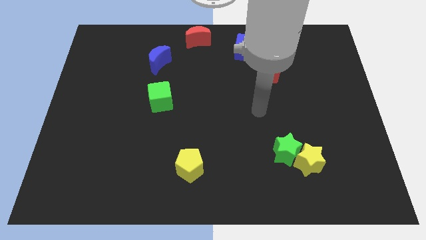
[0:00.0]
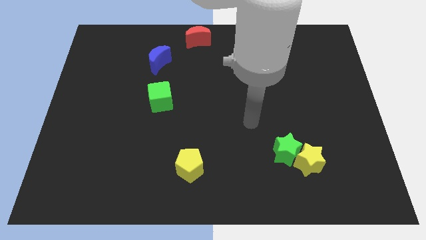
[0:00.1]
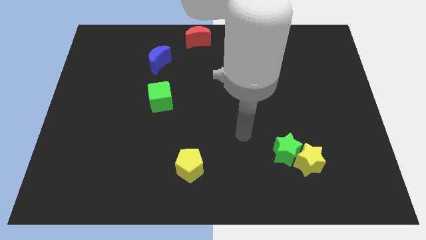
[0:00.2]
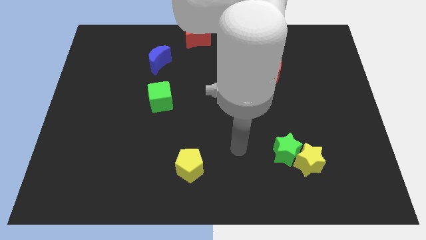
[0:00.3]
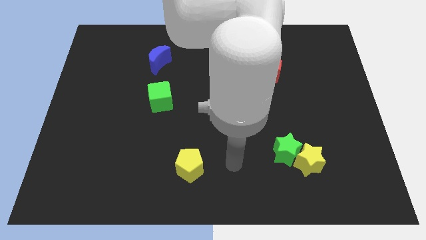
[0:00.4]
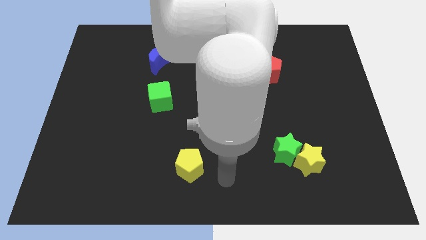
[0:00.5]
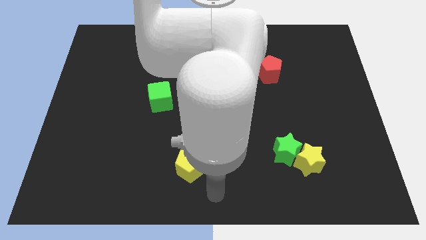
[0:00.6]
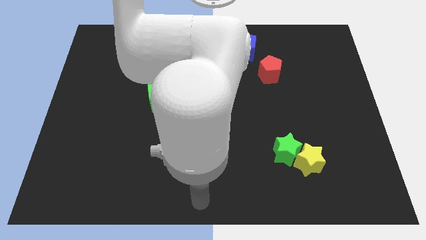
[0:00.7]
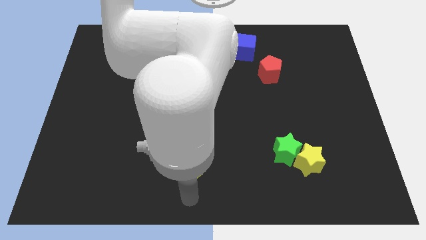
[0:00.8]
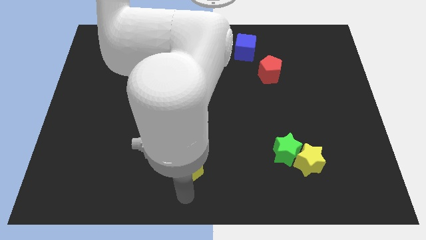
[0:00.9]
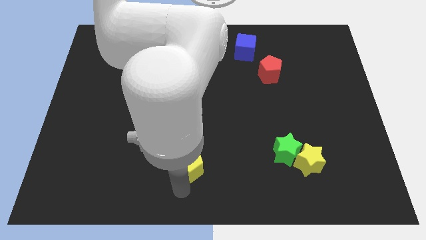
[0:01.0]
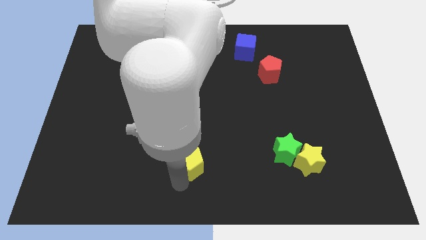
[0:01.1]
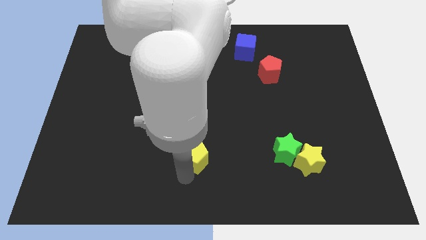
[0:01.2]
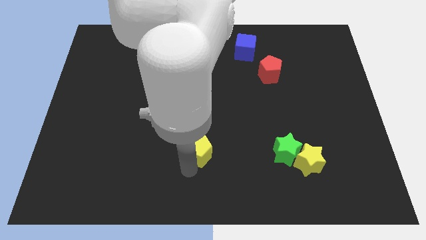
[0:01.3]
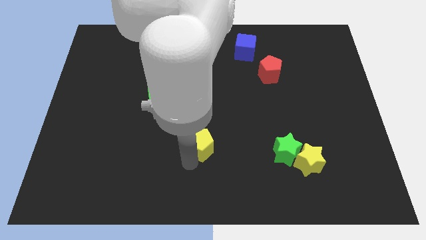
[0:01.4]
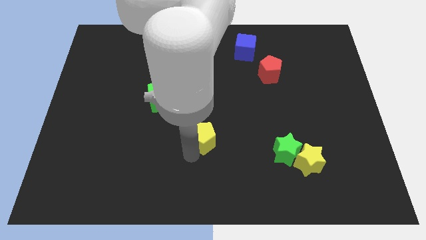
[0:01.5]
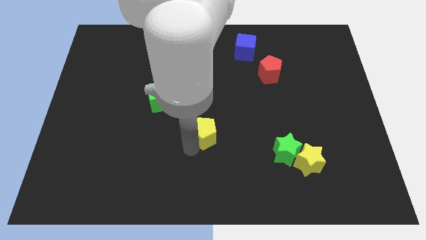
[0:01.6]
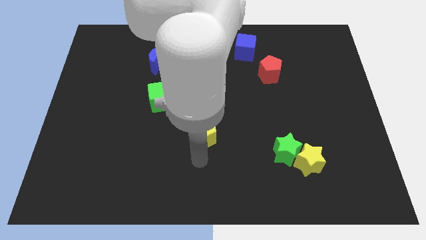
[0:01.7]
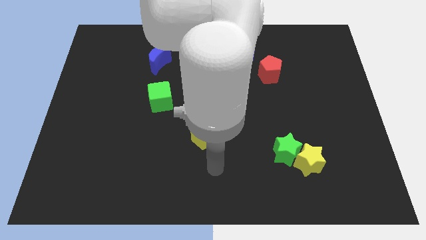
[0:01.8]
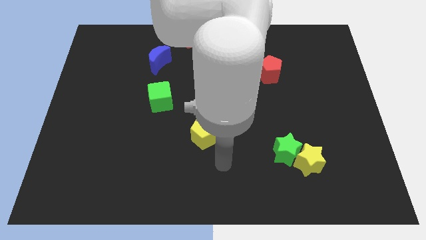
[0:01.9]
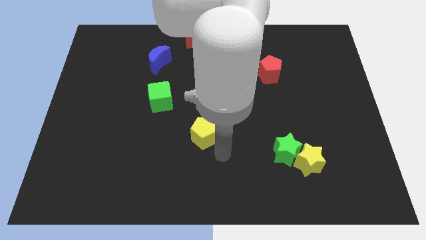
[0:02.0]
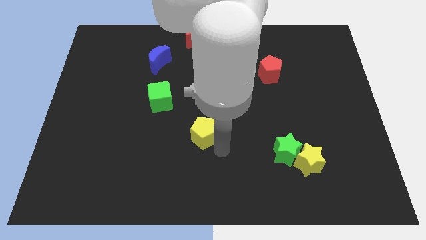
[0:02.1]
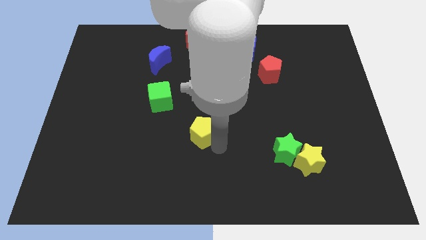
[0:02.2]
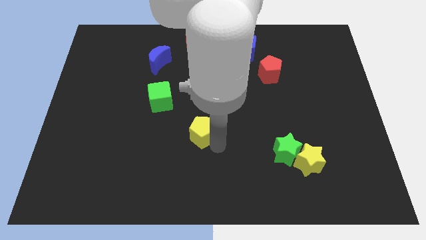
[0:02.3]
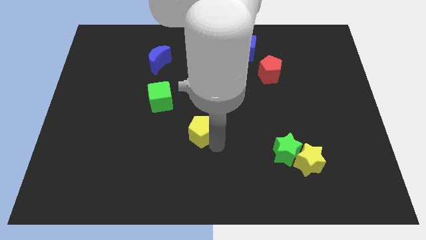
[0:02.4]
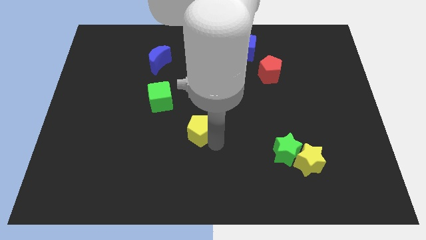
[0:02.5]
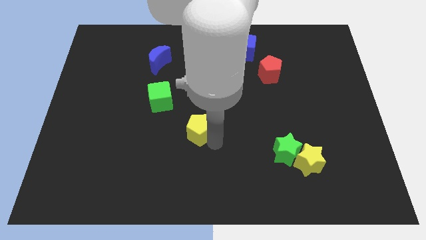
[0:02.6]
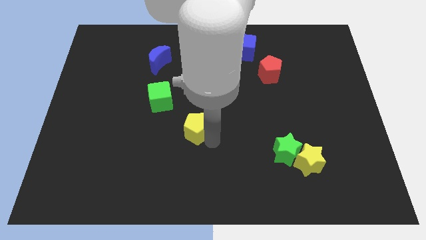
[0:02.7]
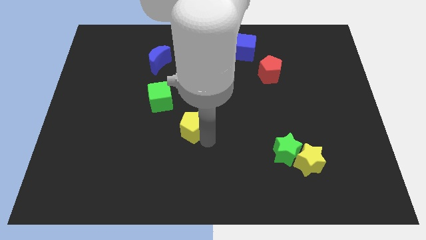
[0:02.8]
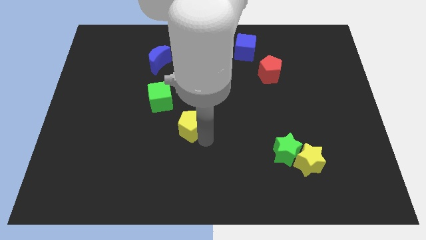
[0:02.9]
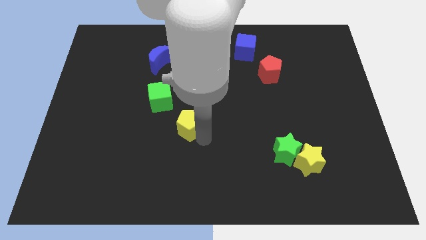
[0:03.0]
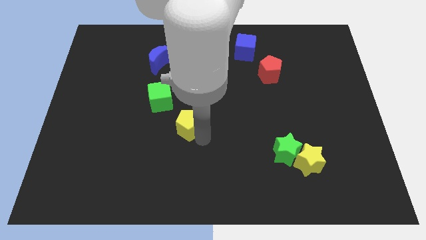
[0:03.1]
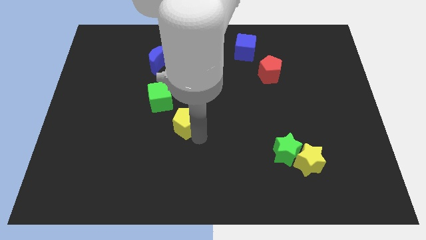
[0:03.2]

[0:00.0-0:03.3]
push yellow pentagon close to the green cube

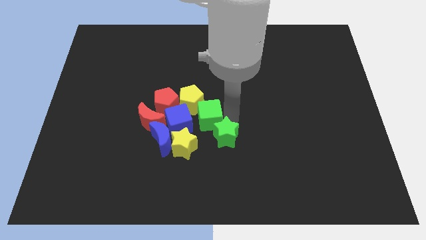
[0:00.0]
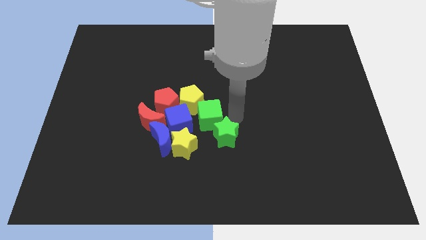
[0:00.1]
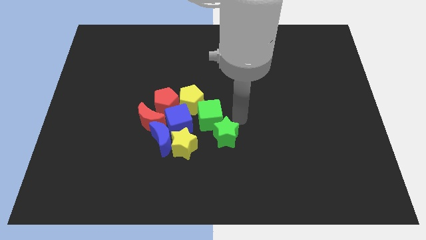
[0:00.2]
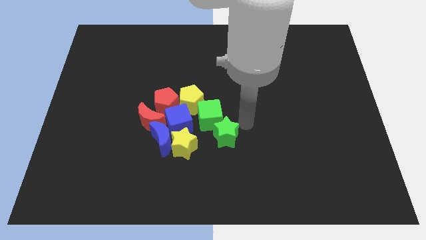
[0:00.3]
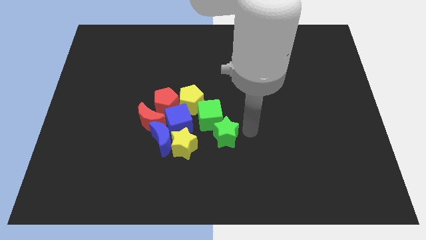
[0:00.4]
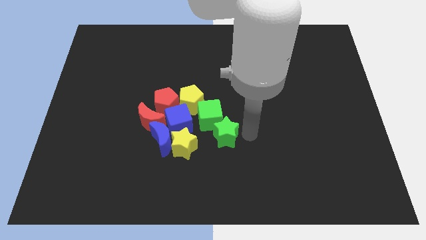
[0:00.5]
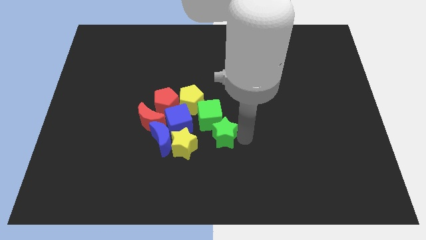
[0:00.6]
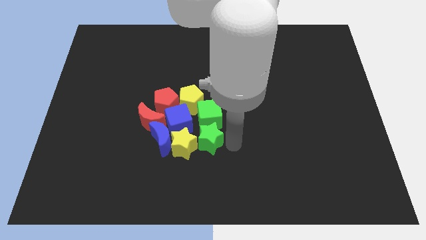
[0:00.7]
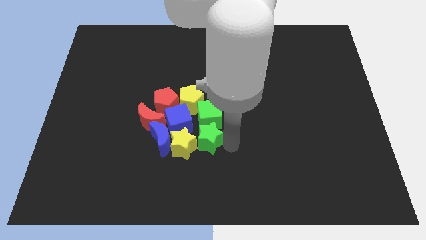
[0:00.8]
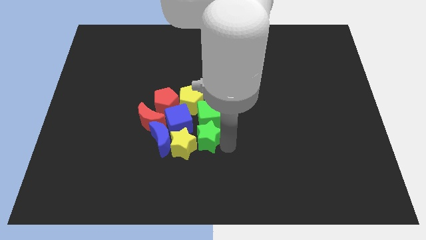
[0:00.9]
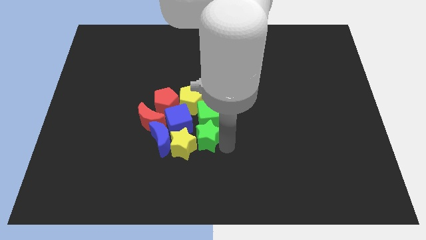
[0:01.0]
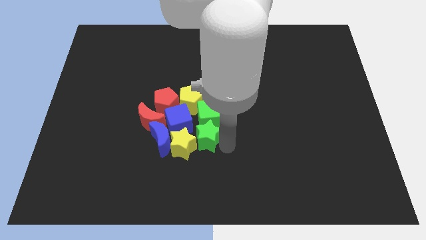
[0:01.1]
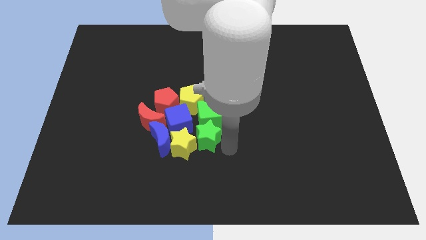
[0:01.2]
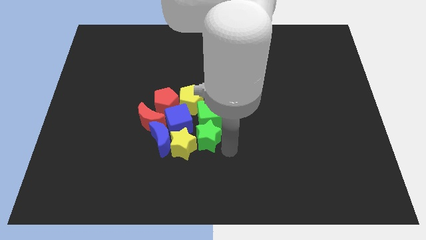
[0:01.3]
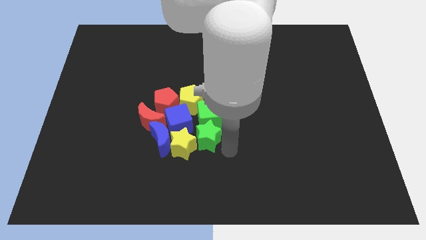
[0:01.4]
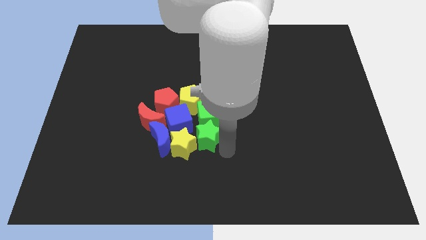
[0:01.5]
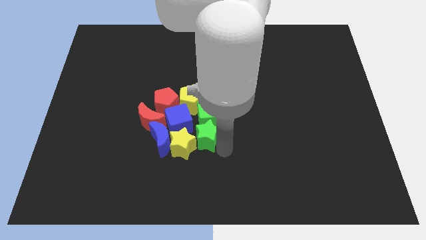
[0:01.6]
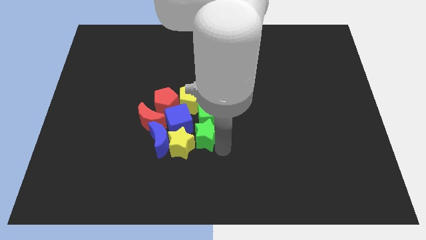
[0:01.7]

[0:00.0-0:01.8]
push the green star to the bottom of the green cube

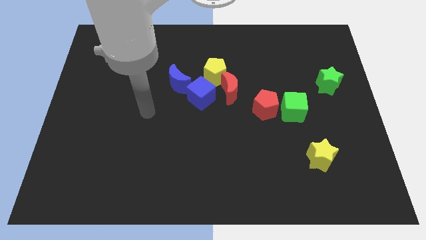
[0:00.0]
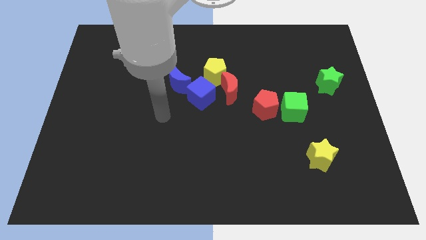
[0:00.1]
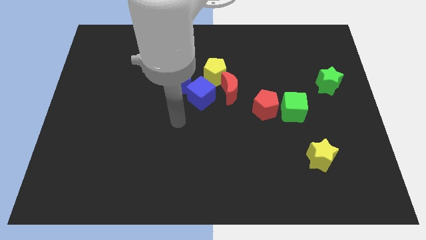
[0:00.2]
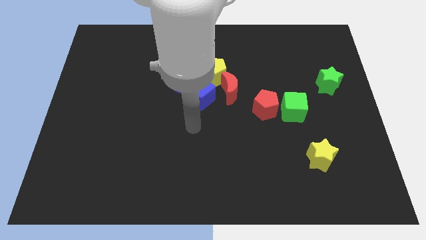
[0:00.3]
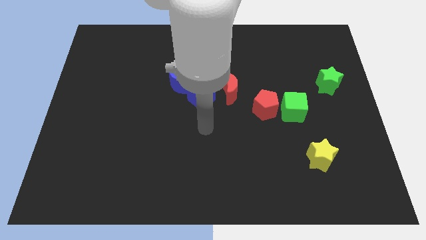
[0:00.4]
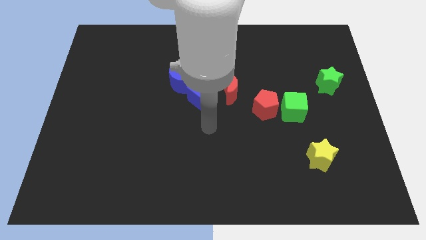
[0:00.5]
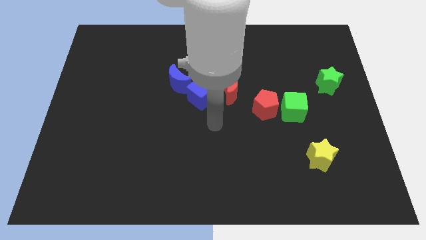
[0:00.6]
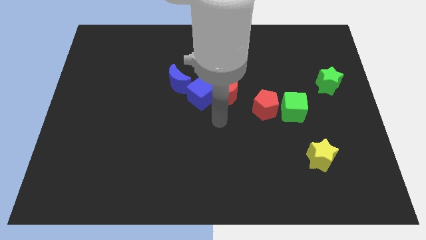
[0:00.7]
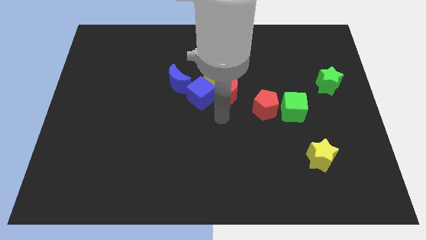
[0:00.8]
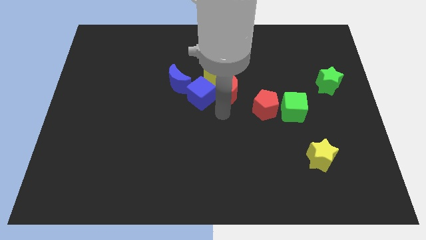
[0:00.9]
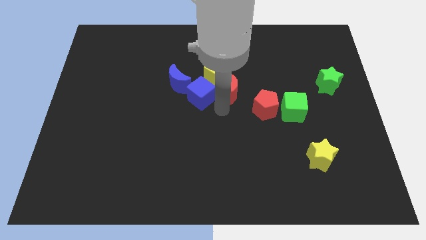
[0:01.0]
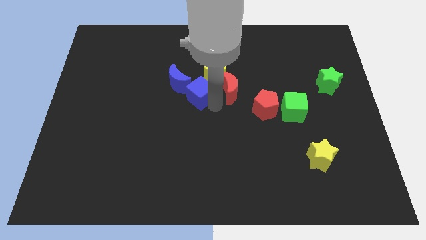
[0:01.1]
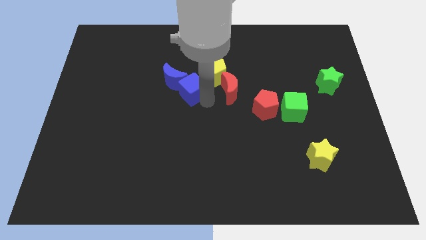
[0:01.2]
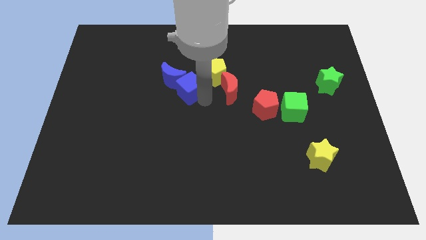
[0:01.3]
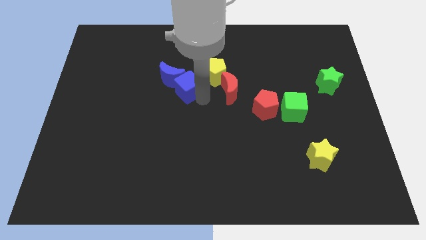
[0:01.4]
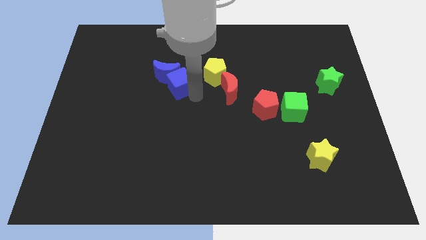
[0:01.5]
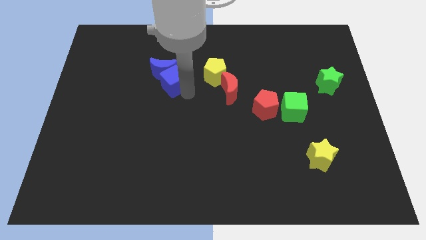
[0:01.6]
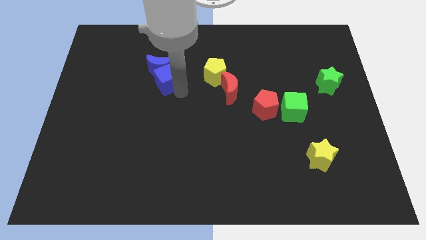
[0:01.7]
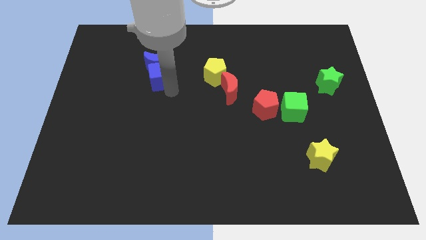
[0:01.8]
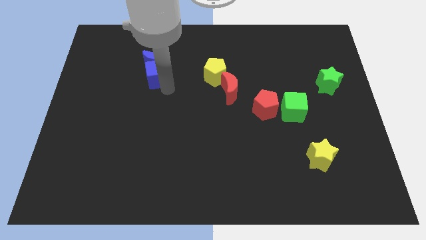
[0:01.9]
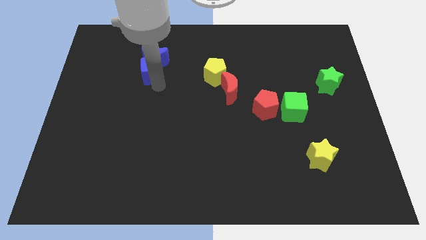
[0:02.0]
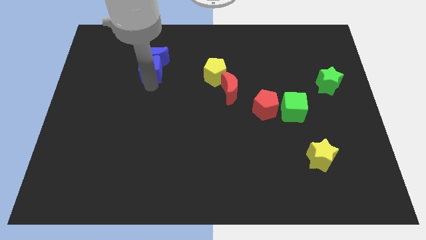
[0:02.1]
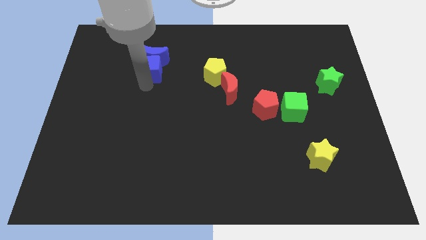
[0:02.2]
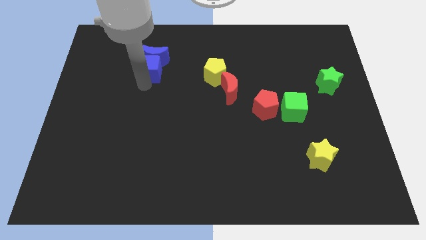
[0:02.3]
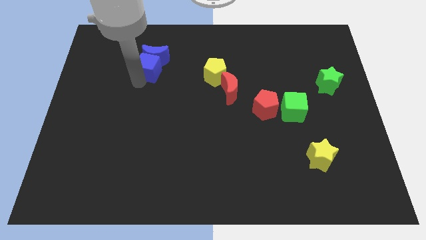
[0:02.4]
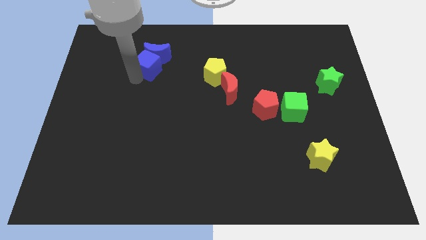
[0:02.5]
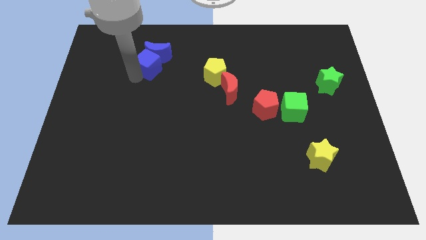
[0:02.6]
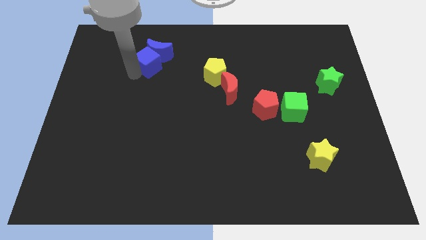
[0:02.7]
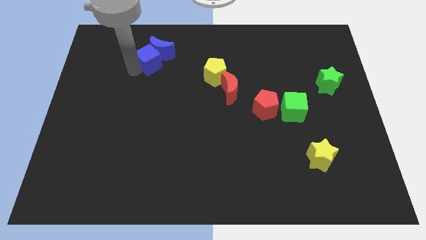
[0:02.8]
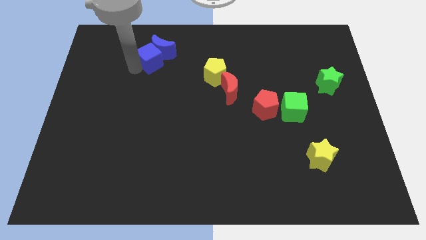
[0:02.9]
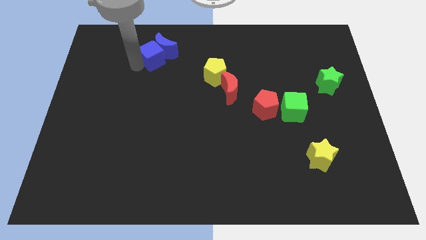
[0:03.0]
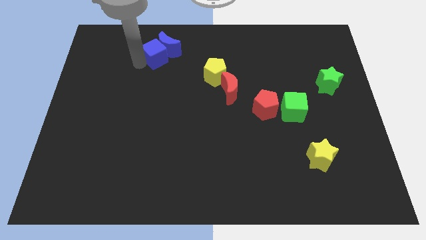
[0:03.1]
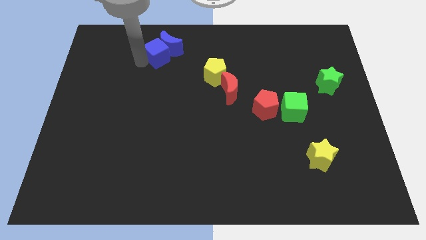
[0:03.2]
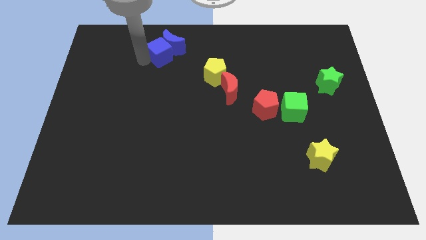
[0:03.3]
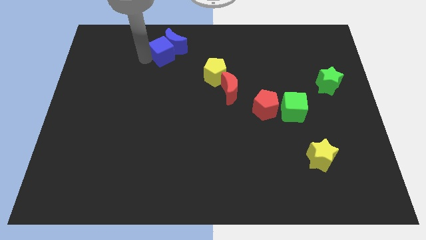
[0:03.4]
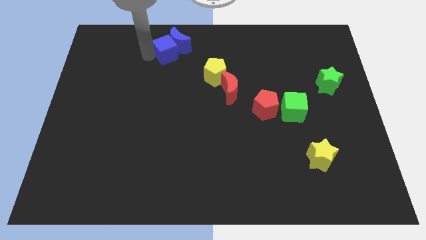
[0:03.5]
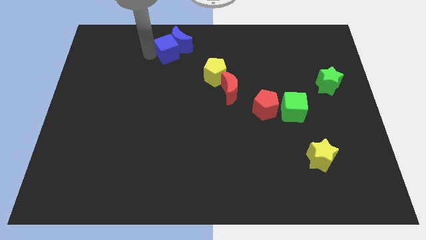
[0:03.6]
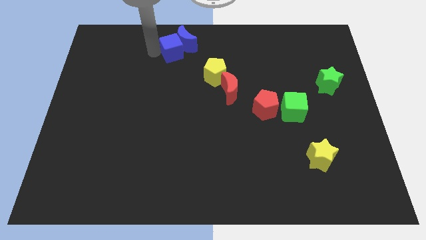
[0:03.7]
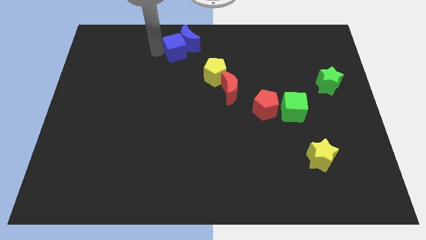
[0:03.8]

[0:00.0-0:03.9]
separate the blue blocks from the yellow pentagon
